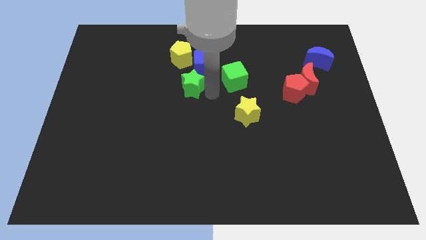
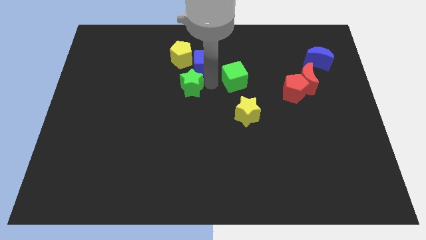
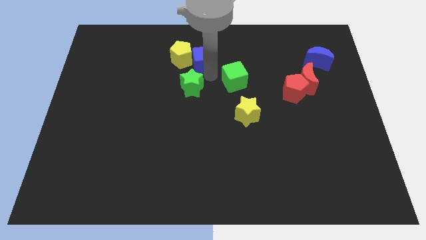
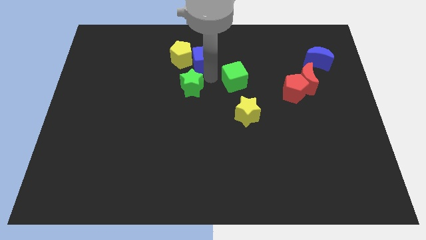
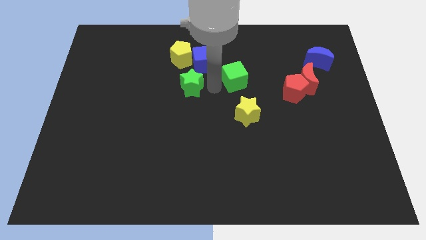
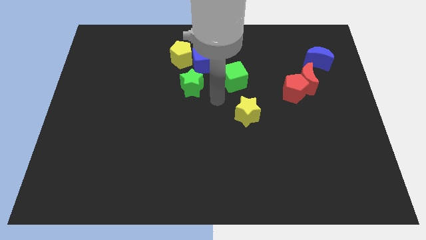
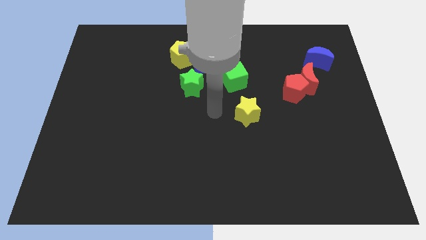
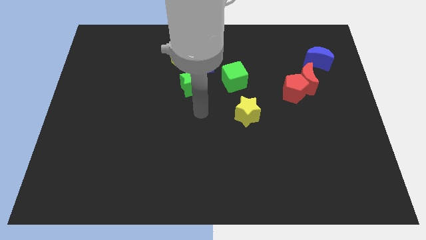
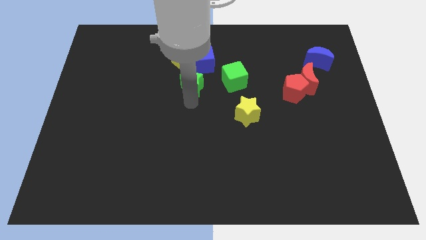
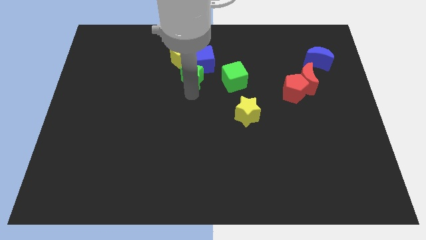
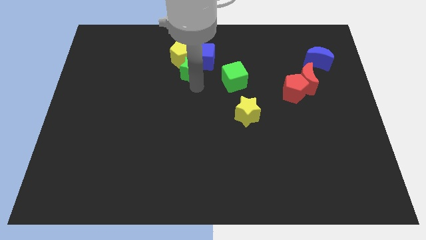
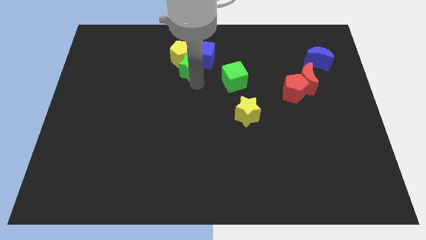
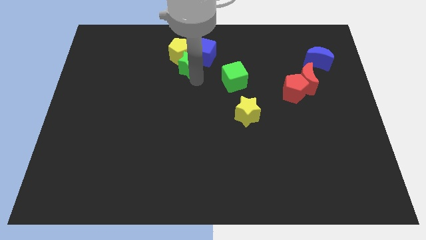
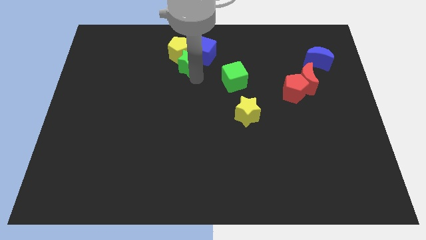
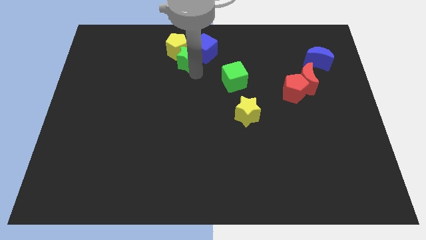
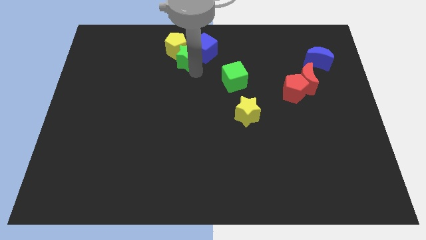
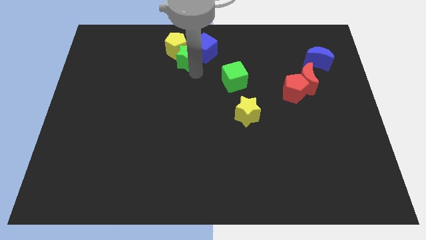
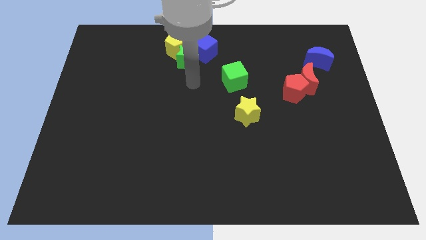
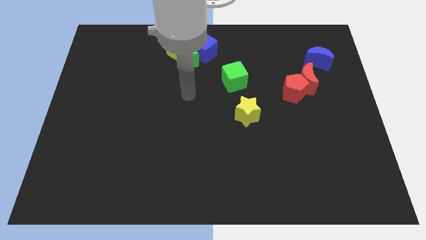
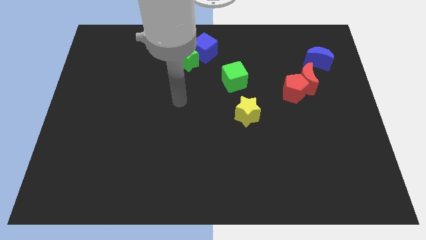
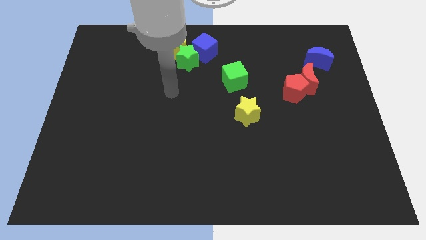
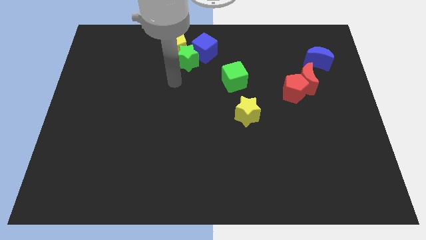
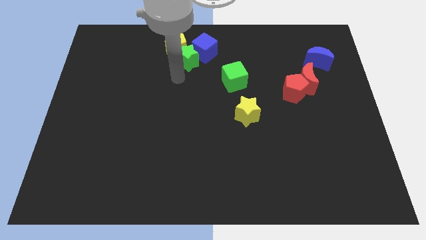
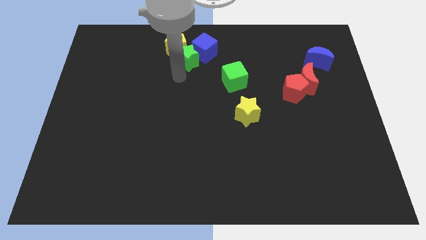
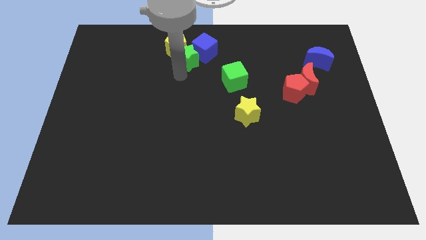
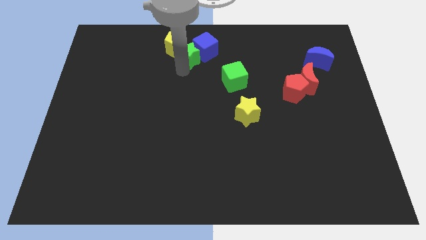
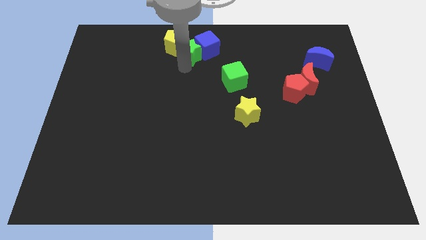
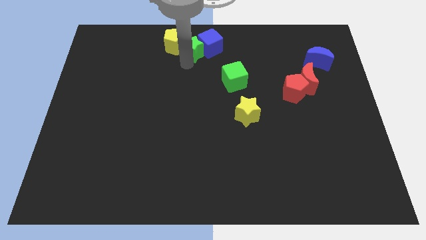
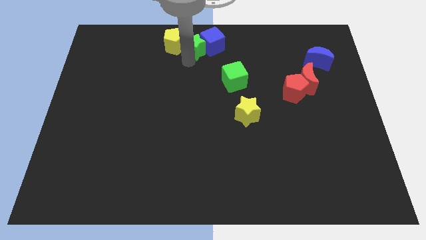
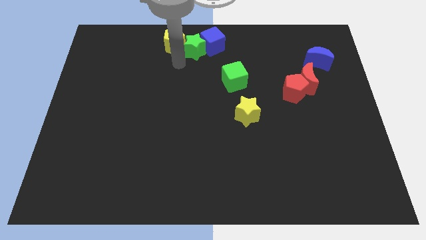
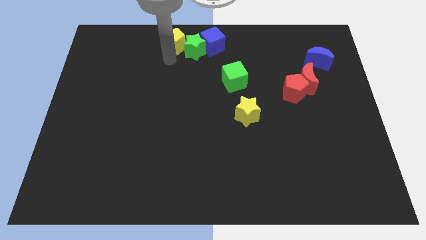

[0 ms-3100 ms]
slide green star into blue cube and yellow pentagon

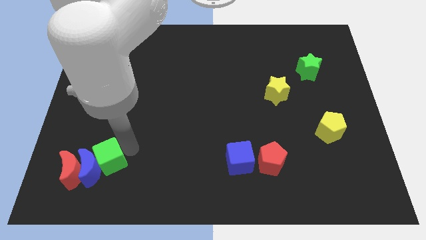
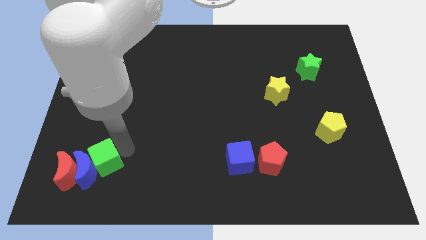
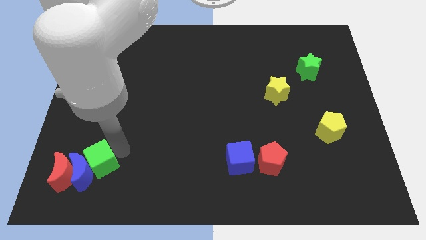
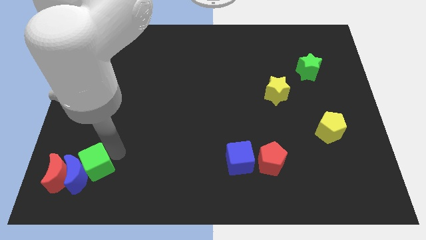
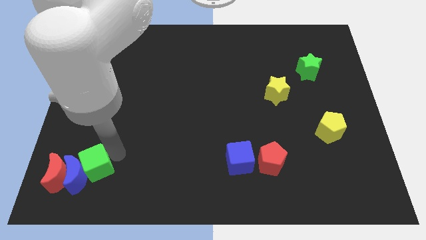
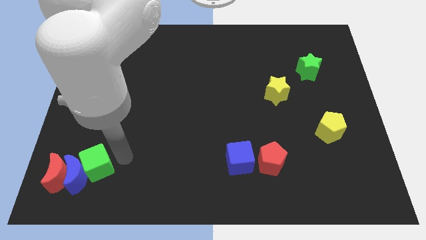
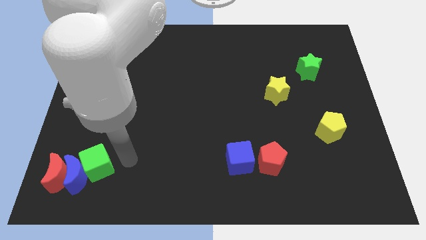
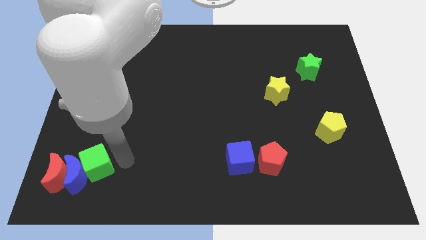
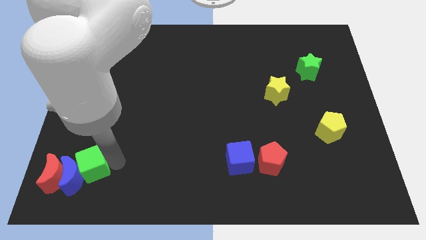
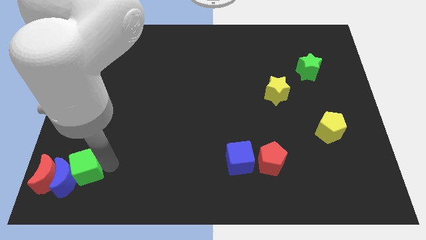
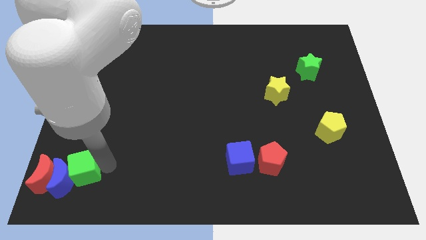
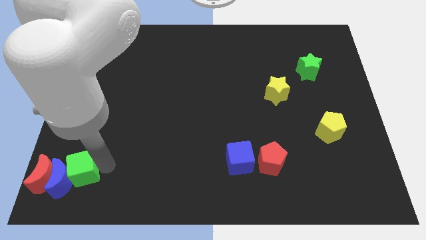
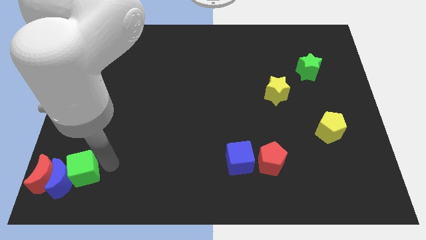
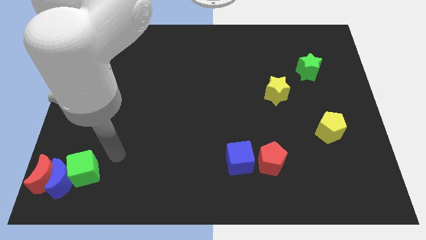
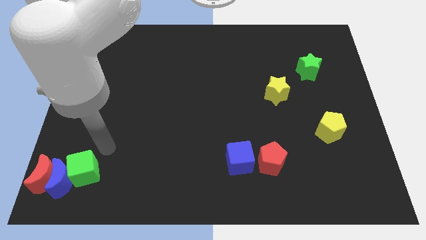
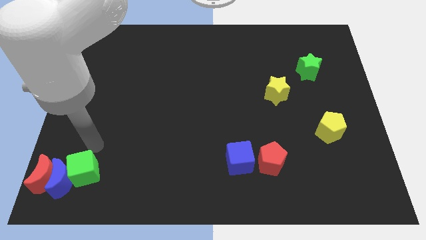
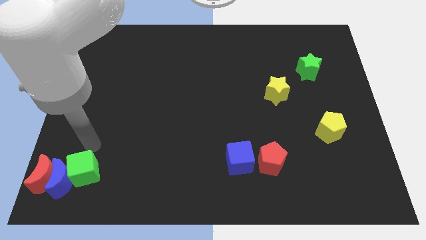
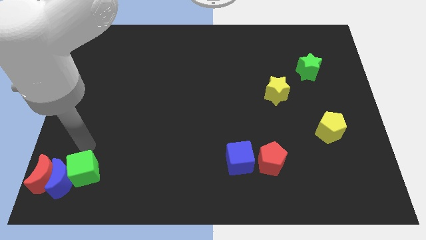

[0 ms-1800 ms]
push green cubeblue crescentred crescent to the bottom left of the board

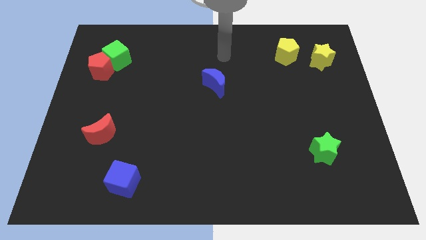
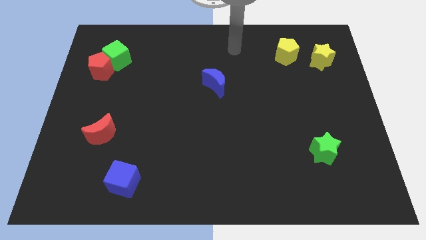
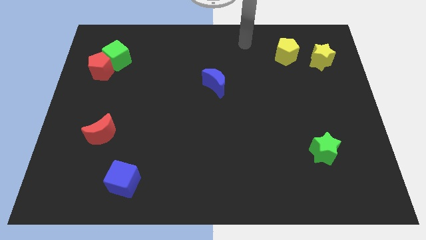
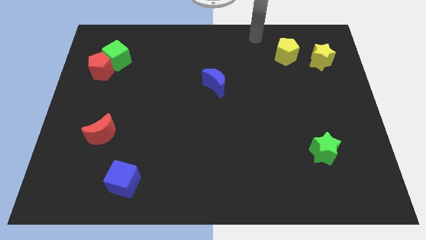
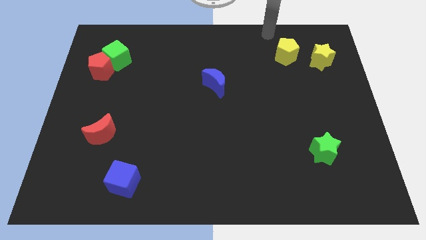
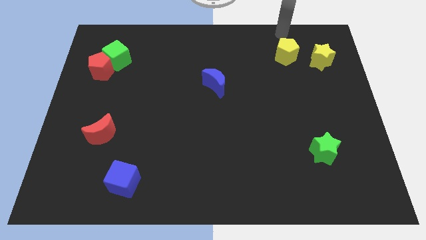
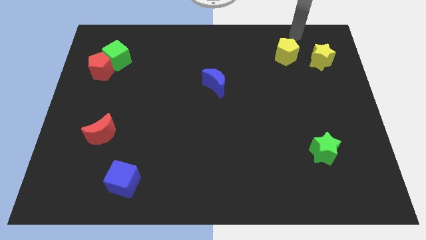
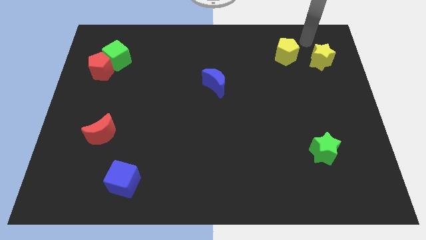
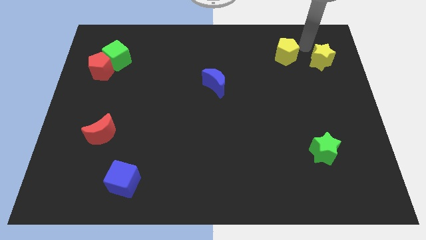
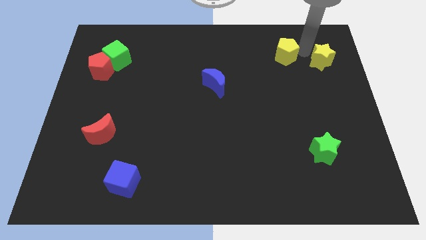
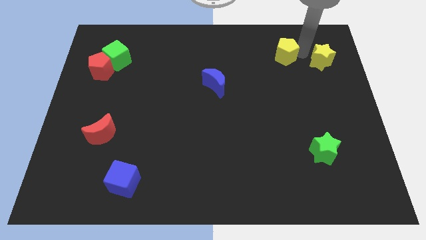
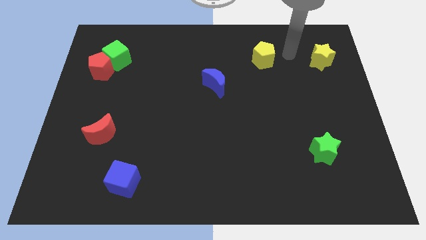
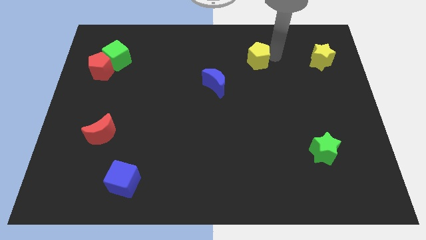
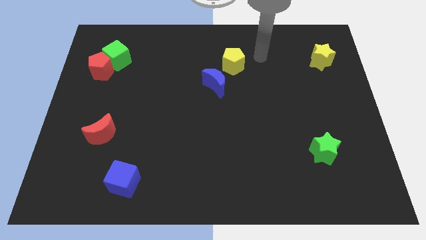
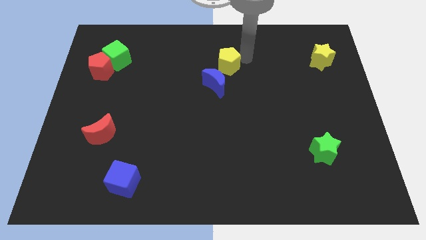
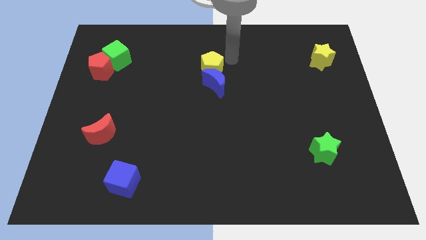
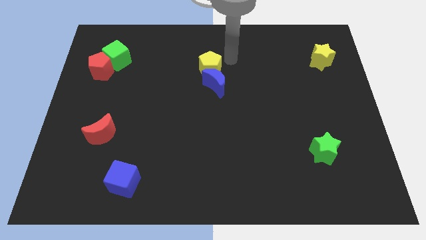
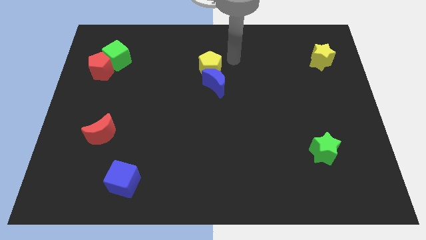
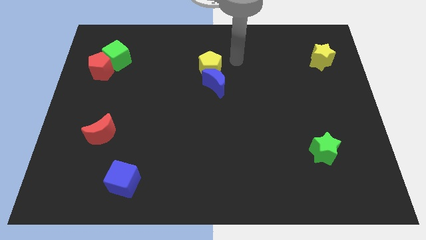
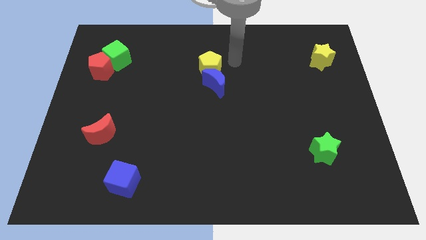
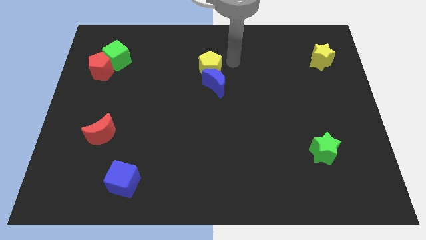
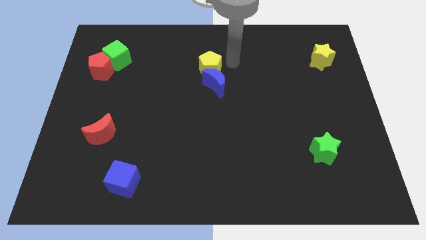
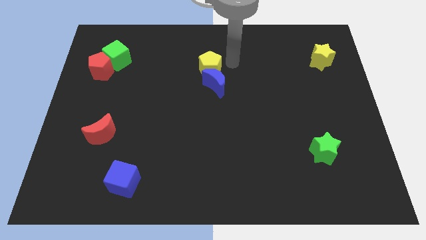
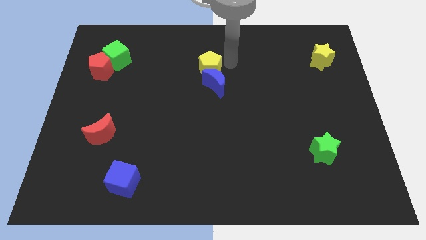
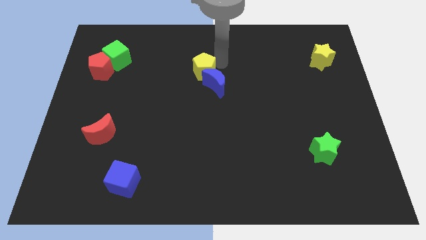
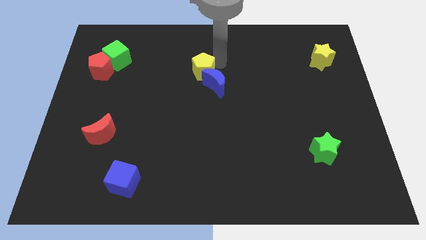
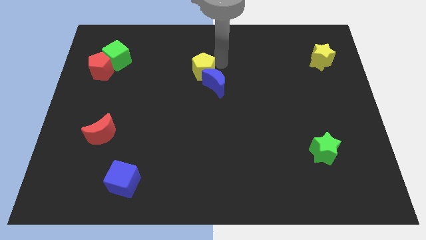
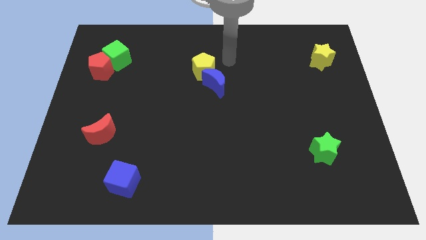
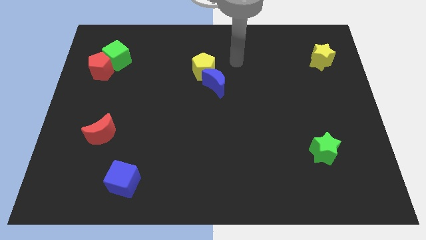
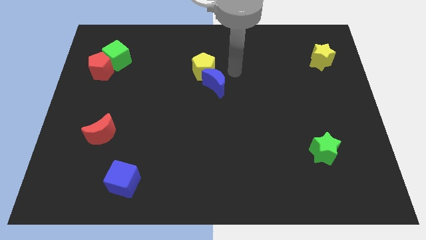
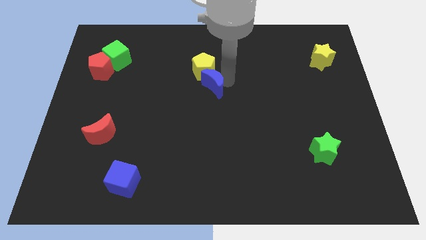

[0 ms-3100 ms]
move the yellow pentagon above the blue crescent

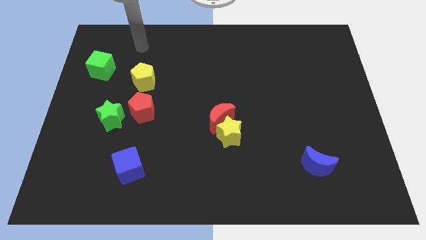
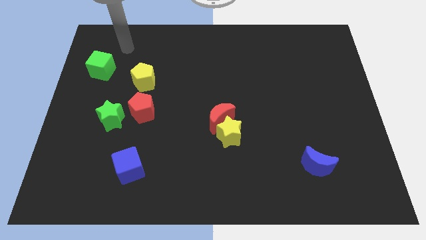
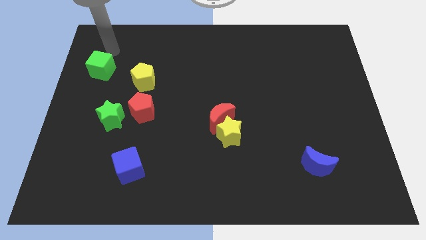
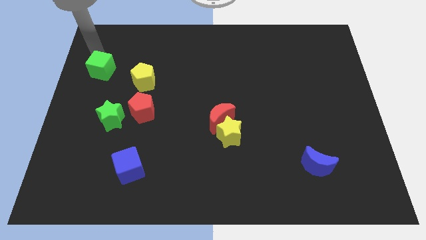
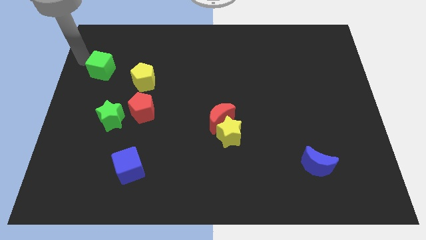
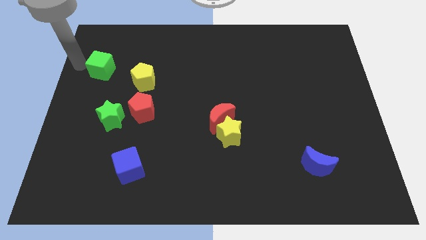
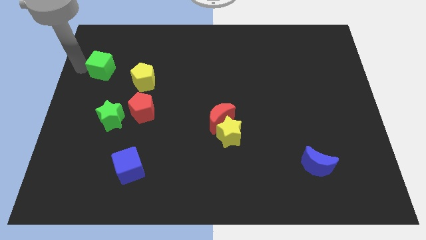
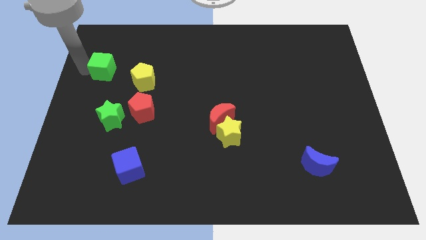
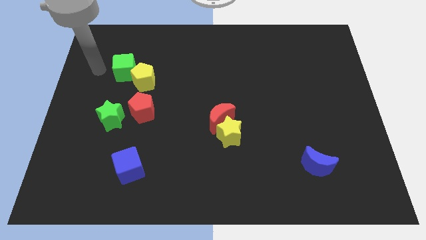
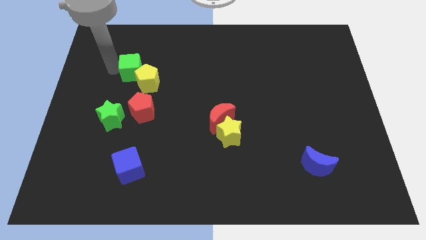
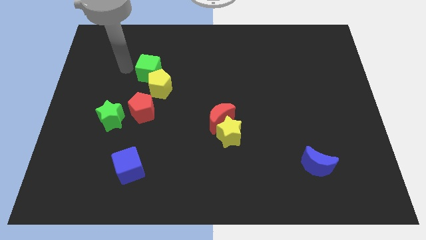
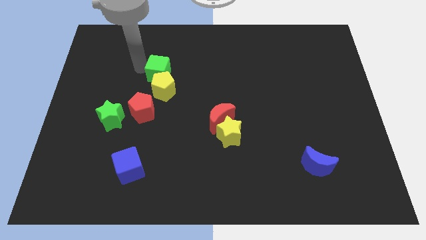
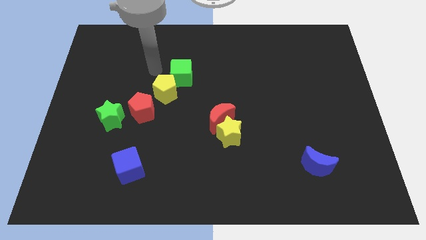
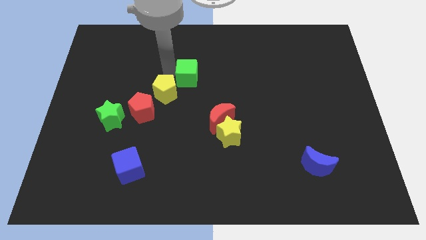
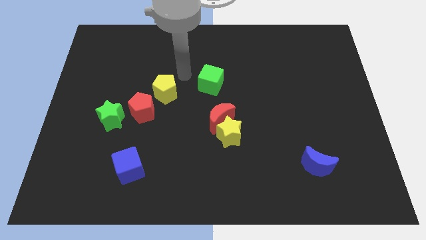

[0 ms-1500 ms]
slide the green cube slightly to the right
